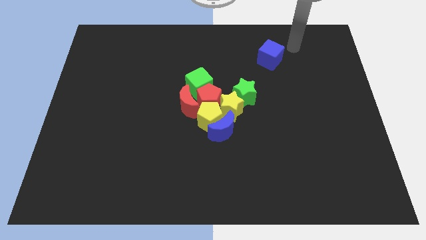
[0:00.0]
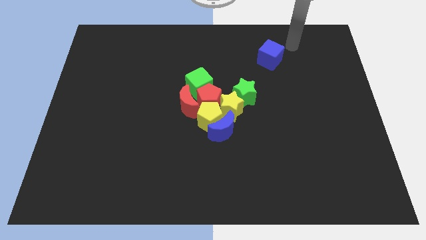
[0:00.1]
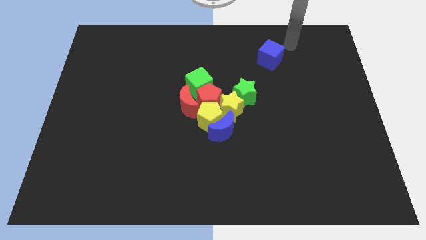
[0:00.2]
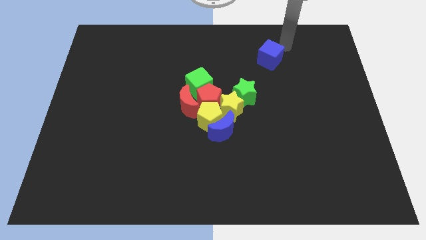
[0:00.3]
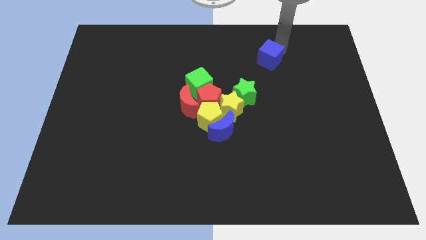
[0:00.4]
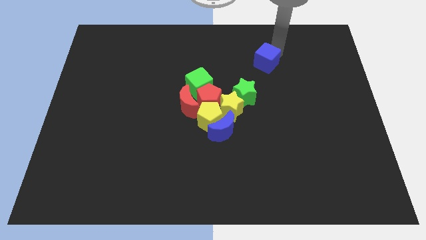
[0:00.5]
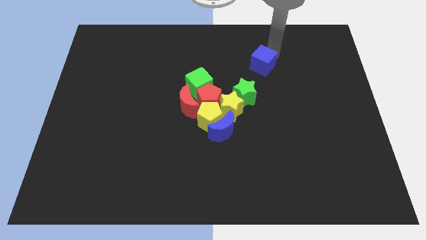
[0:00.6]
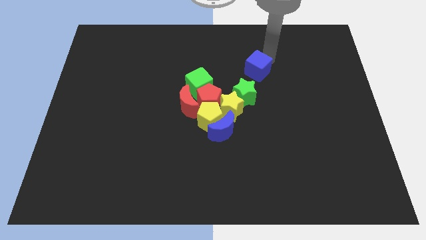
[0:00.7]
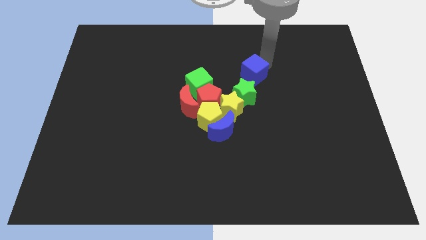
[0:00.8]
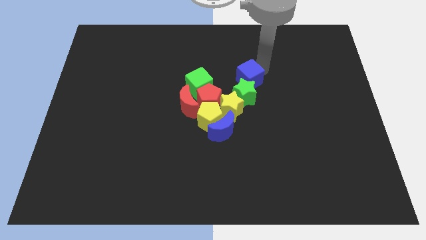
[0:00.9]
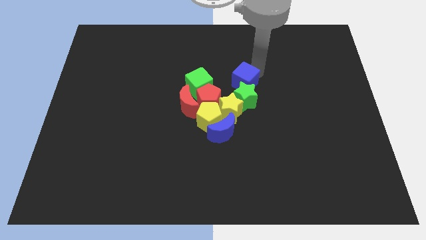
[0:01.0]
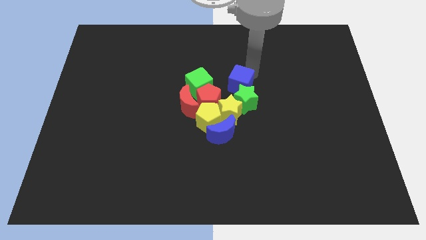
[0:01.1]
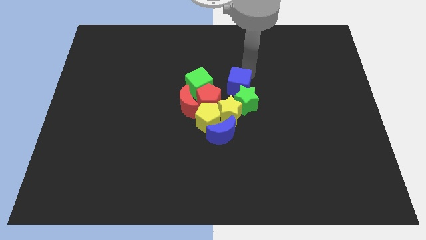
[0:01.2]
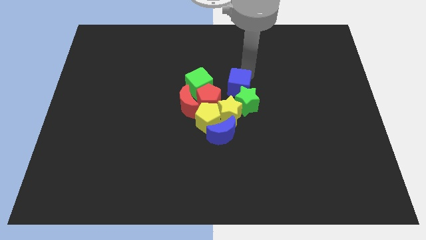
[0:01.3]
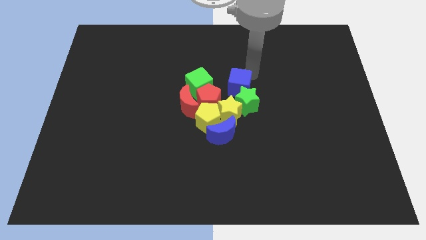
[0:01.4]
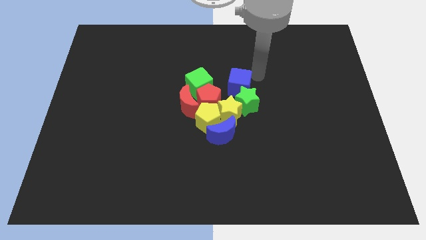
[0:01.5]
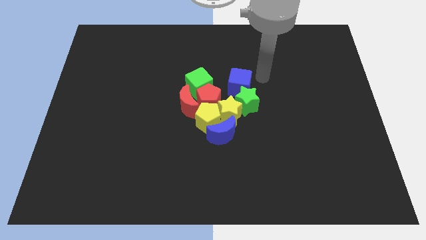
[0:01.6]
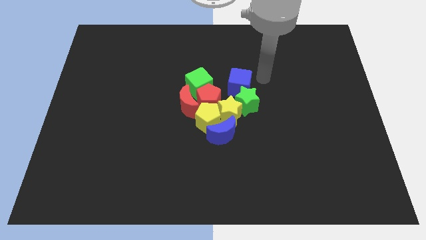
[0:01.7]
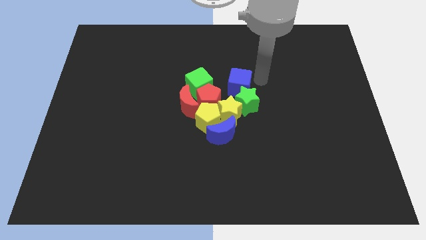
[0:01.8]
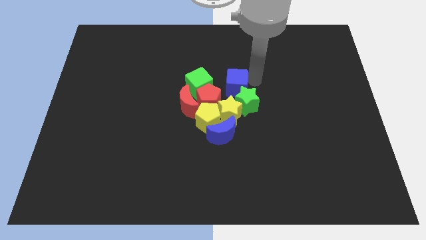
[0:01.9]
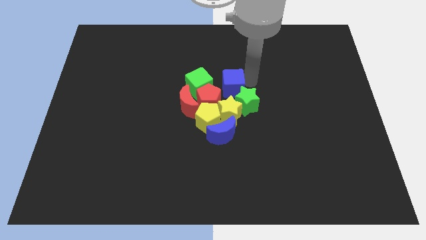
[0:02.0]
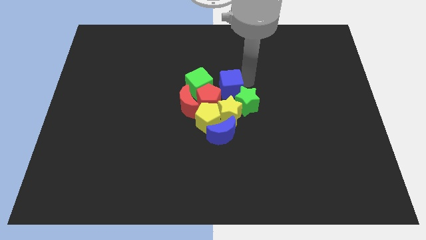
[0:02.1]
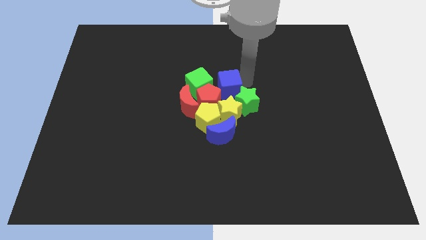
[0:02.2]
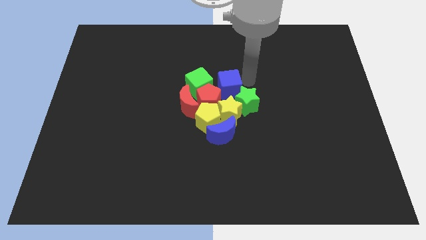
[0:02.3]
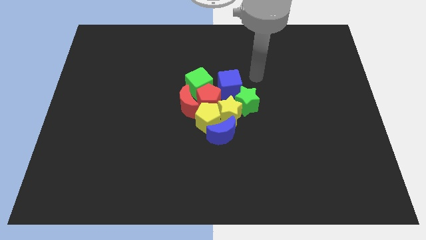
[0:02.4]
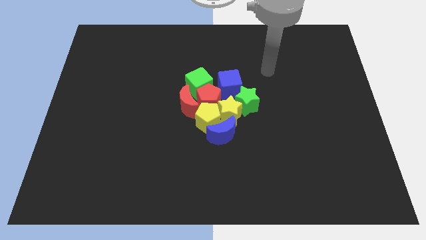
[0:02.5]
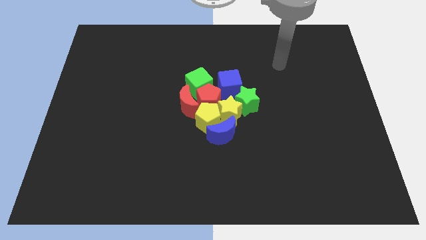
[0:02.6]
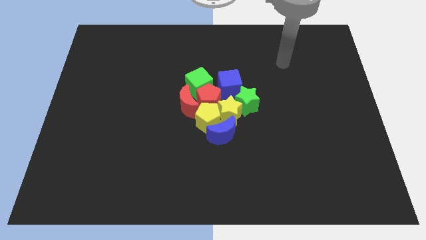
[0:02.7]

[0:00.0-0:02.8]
add blue cube in the group of blocks

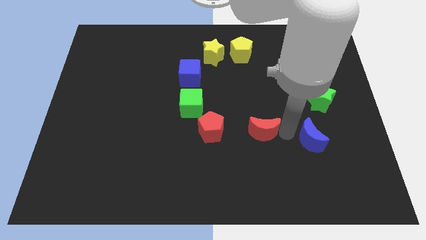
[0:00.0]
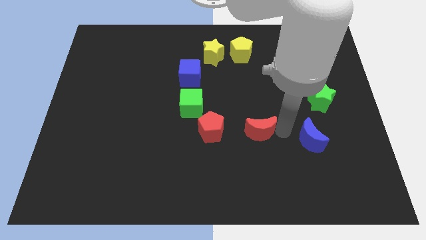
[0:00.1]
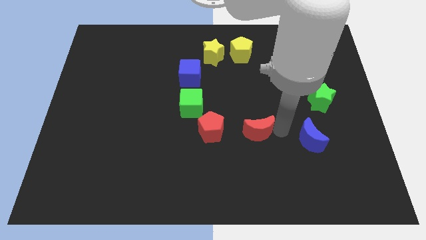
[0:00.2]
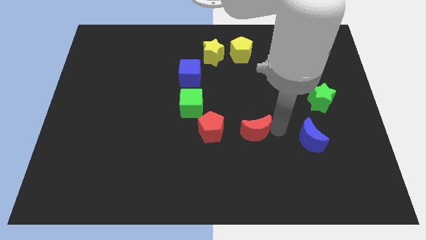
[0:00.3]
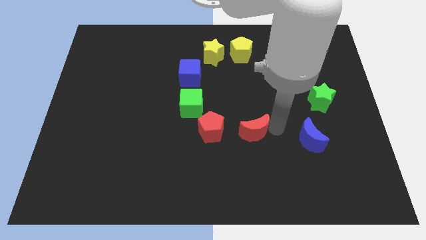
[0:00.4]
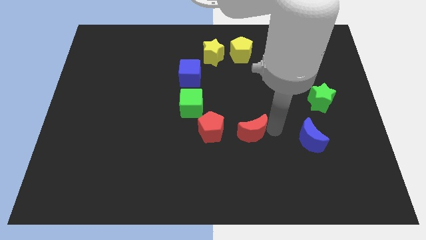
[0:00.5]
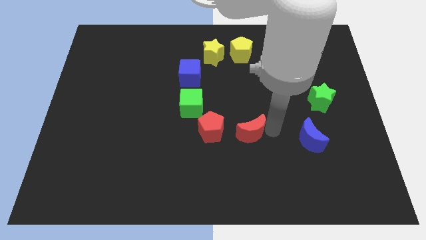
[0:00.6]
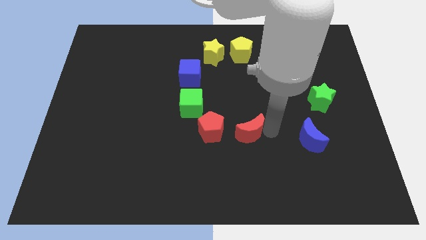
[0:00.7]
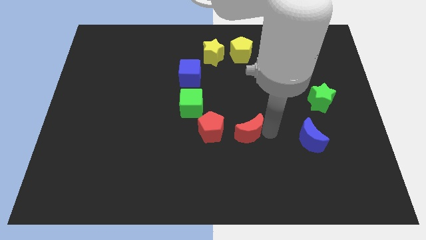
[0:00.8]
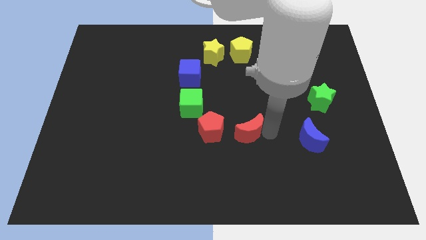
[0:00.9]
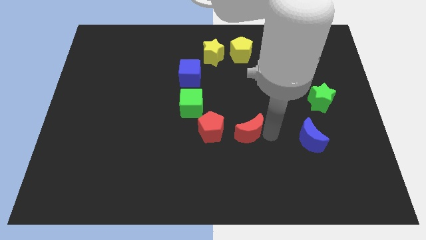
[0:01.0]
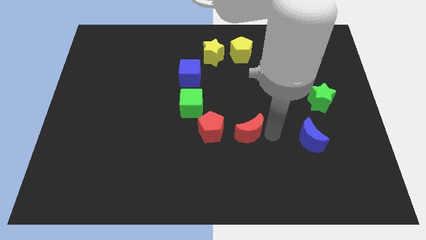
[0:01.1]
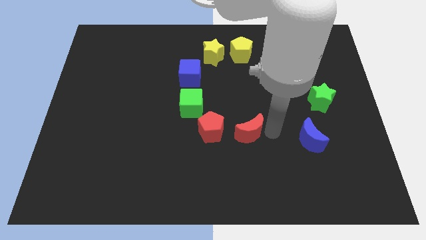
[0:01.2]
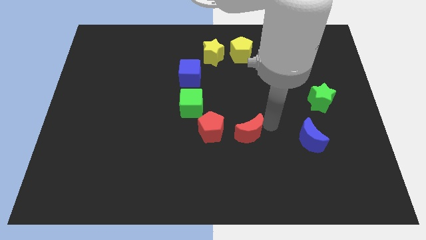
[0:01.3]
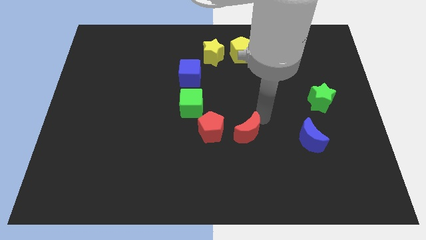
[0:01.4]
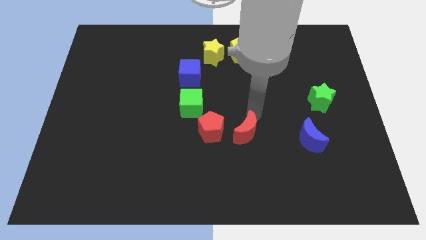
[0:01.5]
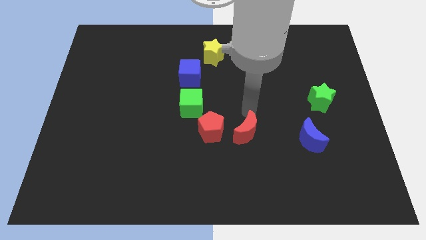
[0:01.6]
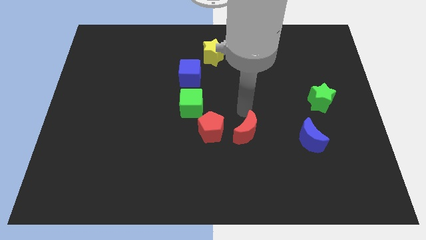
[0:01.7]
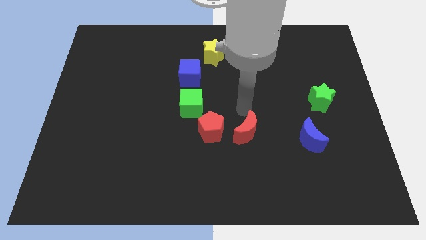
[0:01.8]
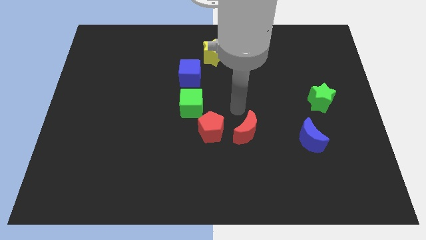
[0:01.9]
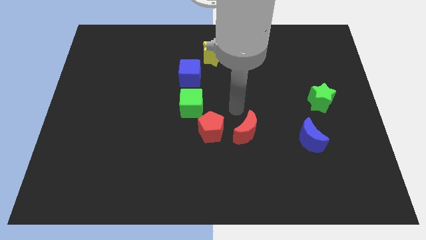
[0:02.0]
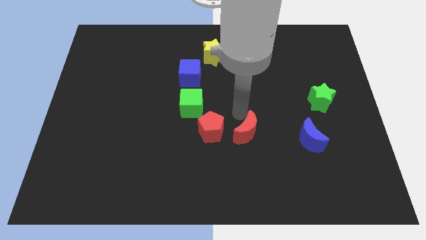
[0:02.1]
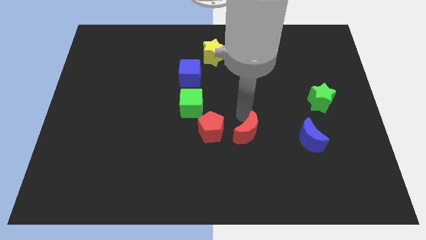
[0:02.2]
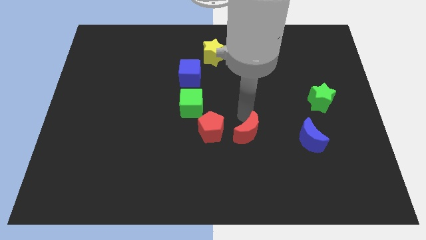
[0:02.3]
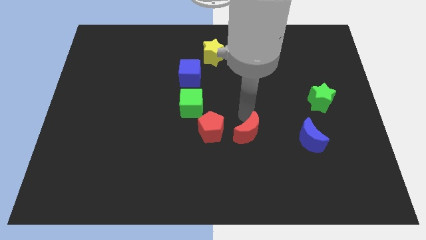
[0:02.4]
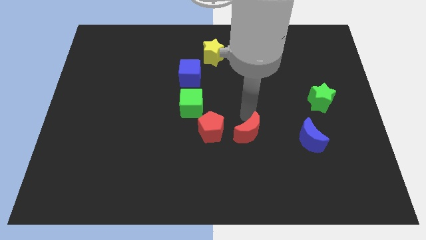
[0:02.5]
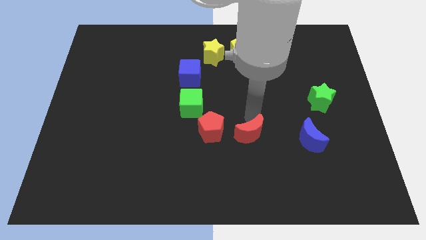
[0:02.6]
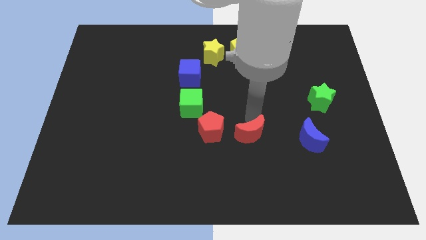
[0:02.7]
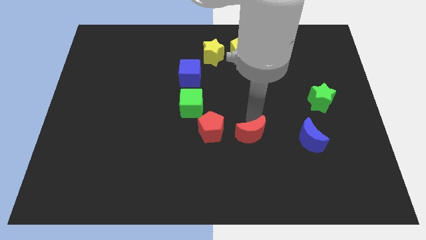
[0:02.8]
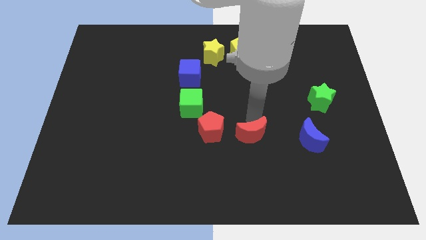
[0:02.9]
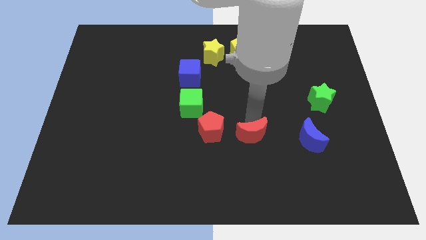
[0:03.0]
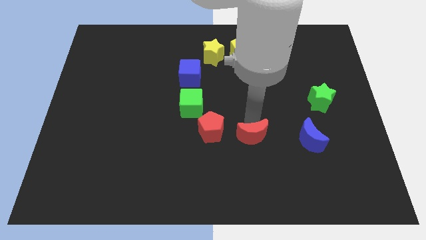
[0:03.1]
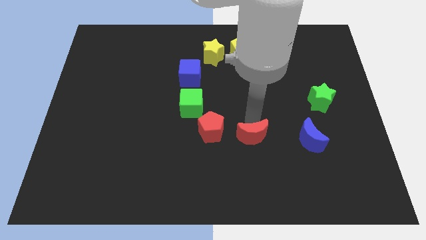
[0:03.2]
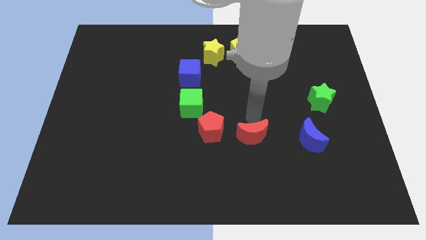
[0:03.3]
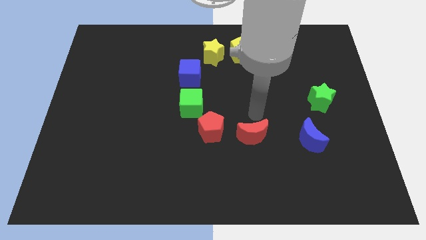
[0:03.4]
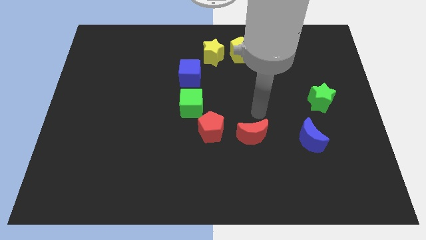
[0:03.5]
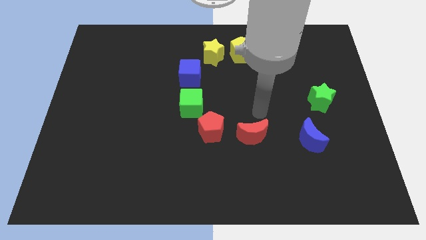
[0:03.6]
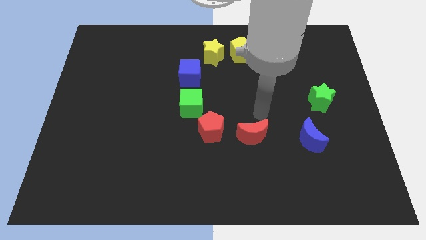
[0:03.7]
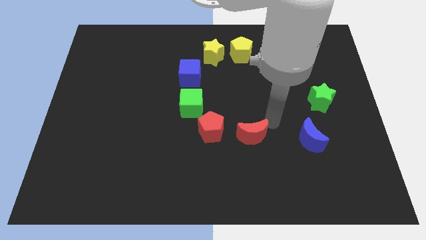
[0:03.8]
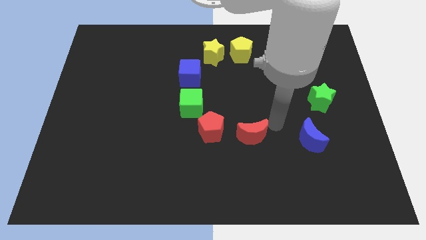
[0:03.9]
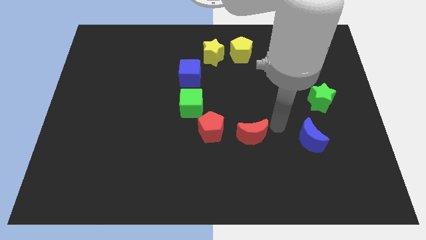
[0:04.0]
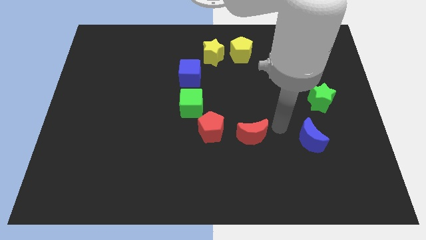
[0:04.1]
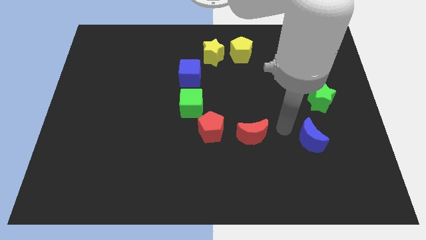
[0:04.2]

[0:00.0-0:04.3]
move the red crescent to the left of the board

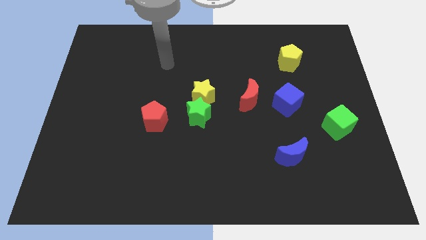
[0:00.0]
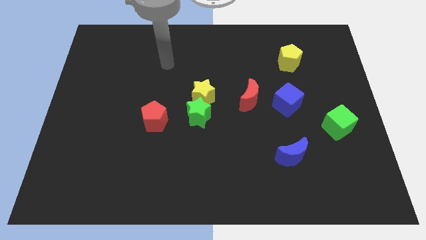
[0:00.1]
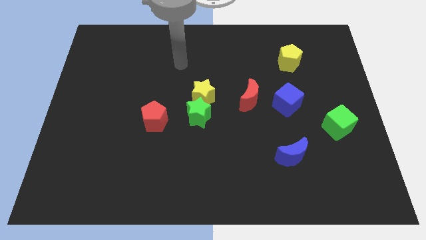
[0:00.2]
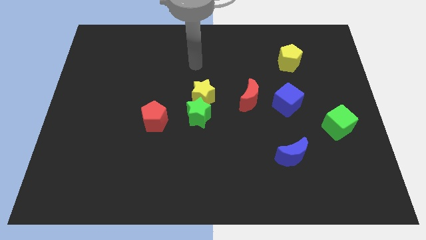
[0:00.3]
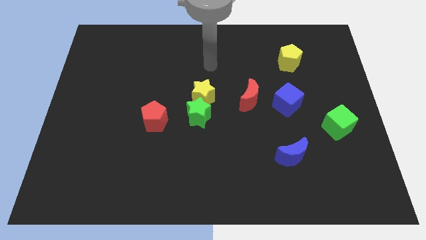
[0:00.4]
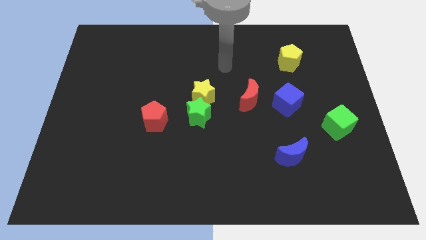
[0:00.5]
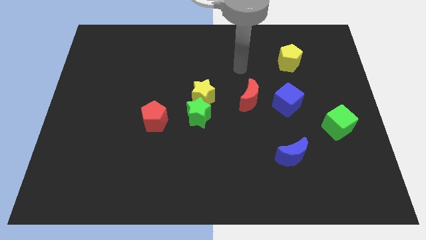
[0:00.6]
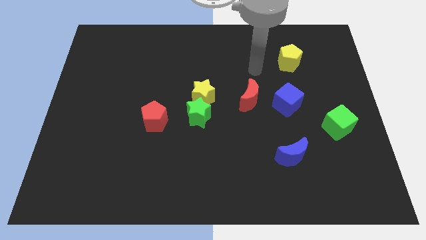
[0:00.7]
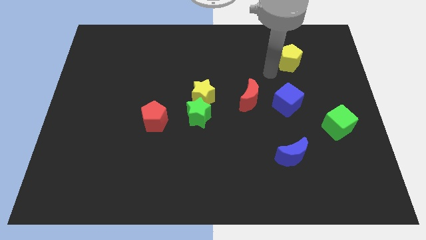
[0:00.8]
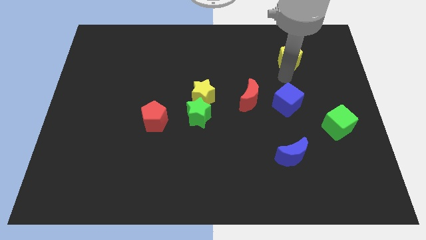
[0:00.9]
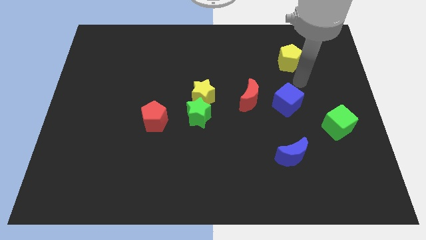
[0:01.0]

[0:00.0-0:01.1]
move your arm close to blue cube

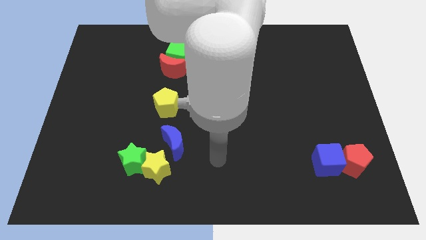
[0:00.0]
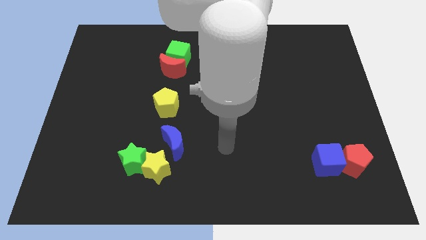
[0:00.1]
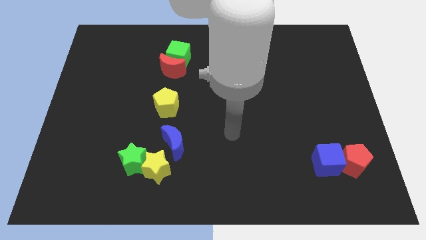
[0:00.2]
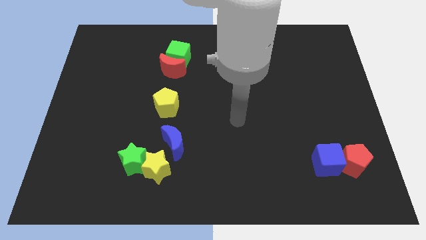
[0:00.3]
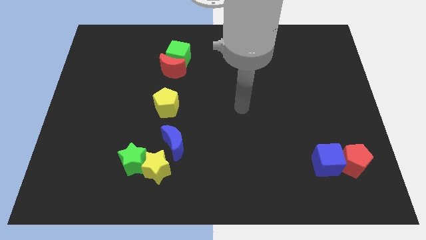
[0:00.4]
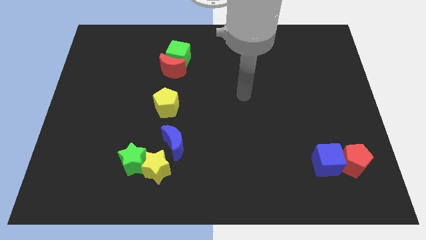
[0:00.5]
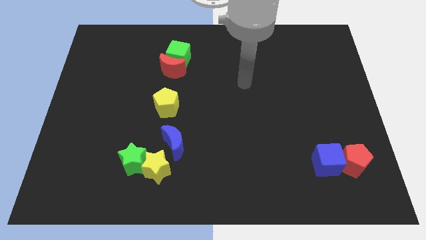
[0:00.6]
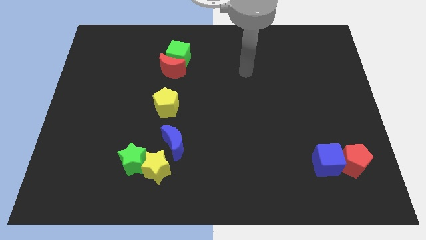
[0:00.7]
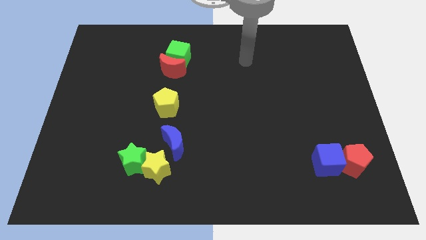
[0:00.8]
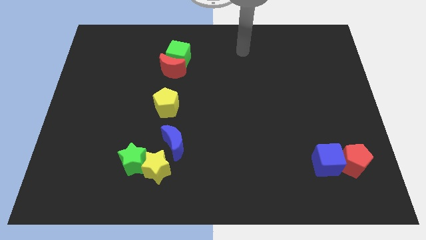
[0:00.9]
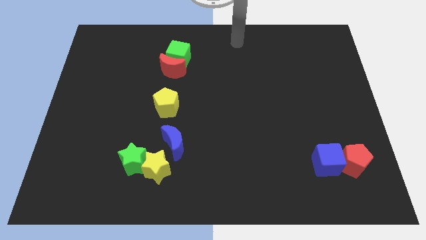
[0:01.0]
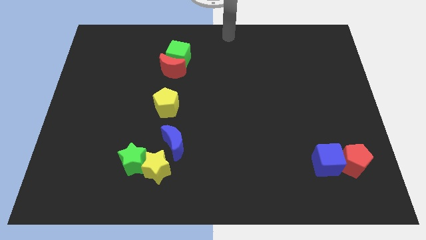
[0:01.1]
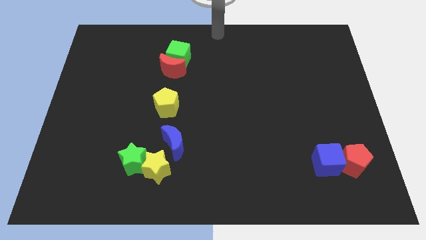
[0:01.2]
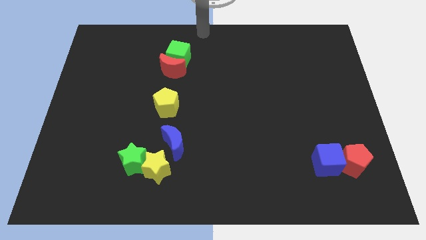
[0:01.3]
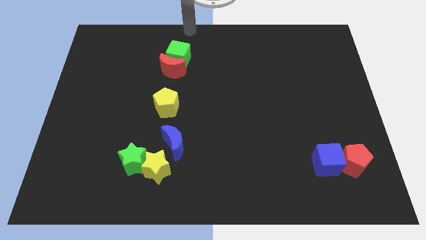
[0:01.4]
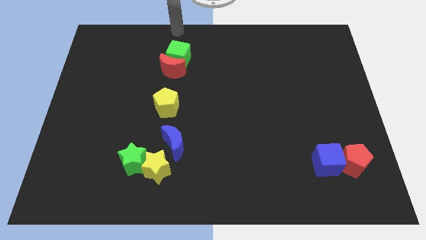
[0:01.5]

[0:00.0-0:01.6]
point your arm at the top of the green cube
